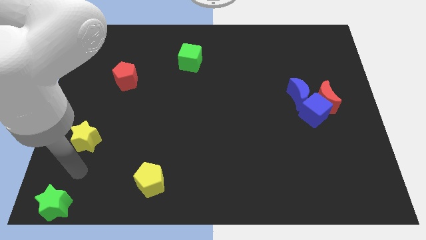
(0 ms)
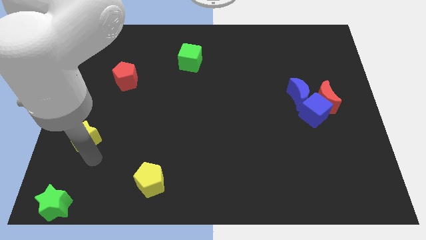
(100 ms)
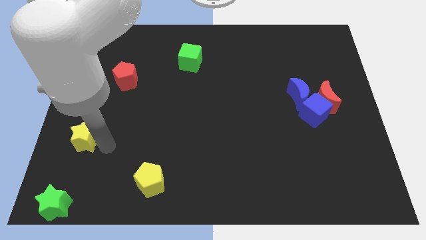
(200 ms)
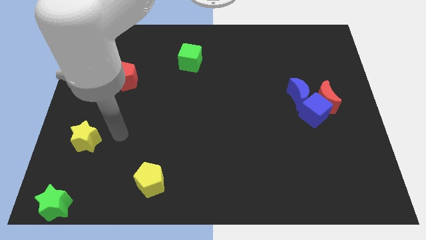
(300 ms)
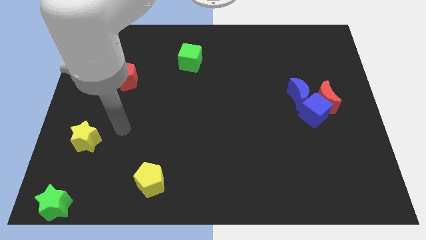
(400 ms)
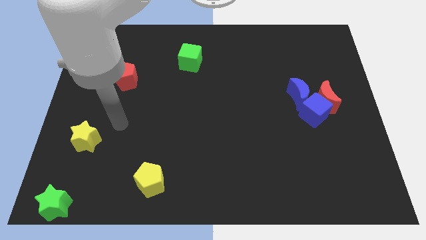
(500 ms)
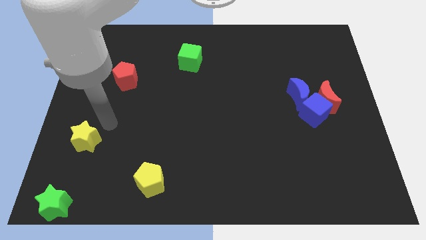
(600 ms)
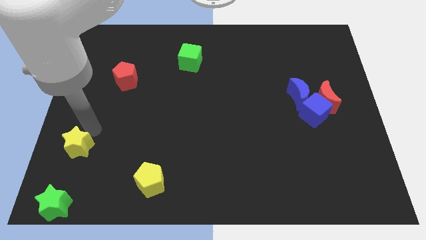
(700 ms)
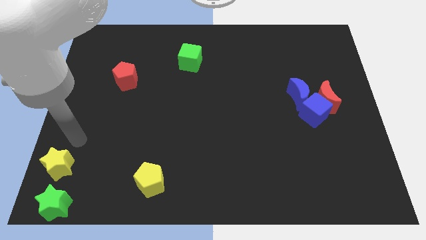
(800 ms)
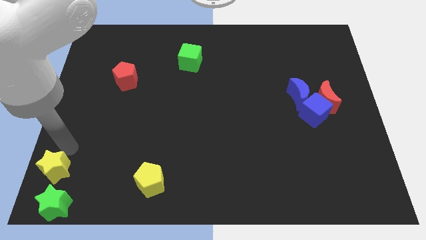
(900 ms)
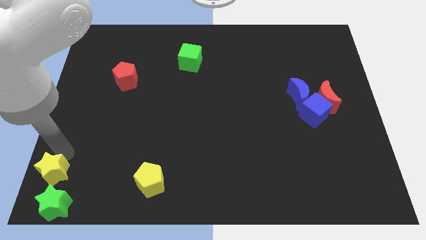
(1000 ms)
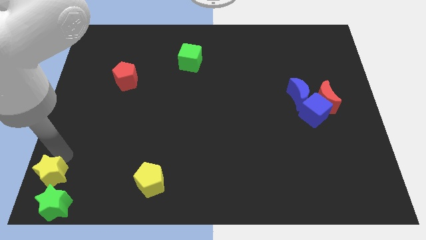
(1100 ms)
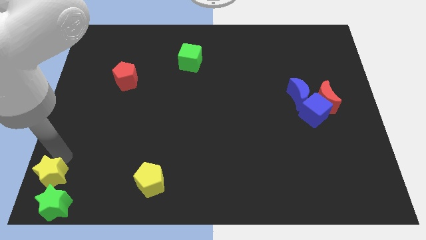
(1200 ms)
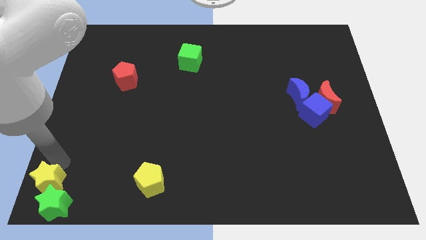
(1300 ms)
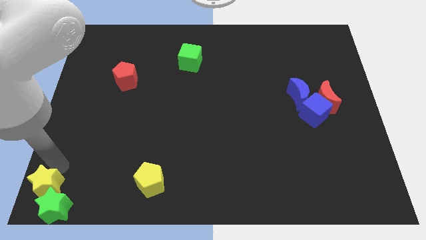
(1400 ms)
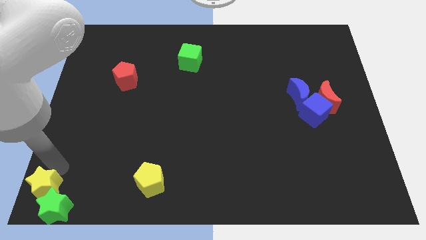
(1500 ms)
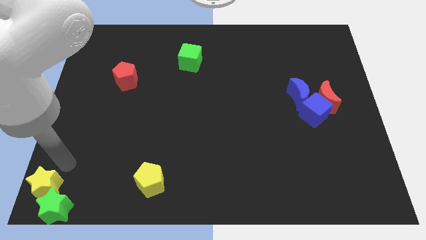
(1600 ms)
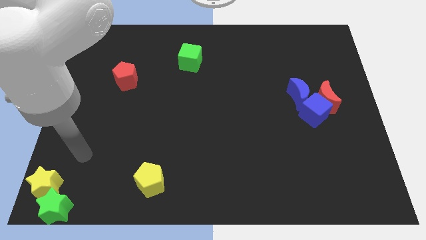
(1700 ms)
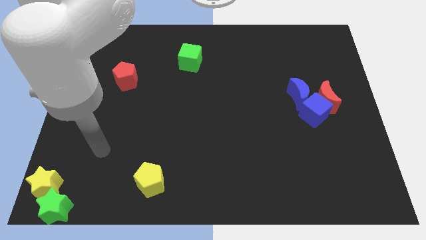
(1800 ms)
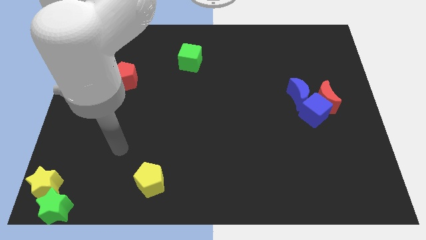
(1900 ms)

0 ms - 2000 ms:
push the yellow star into the green star

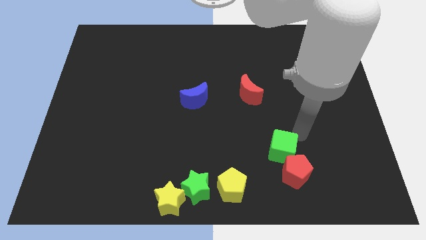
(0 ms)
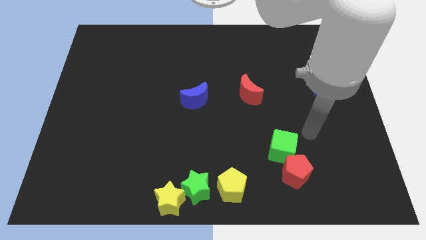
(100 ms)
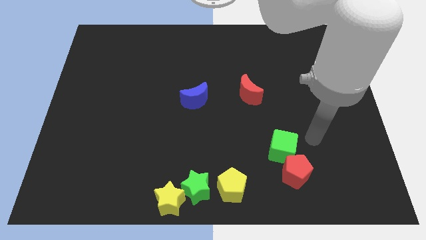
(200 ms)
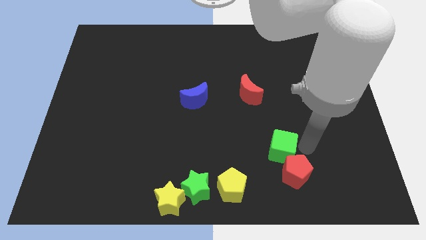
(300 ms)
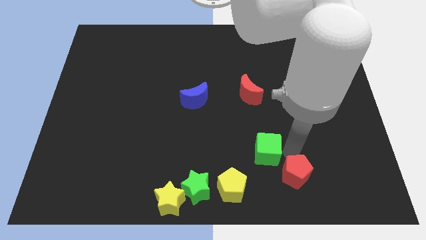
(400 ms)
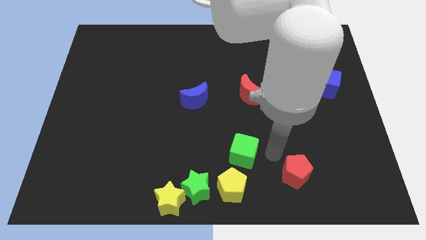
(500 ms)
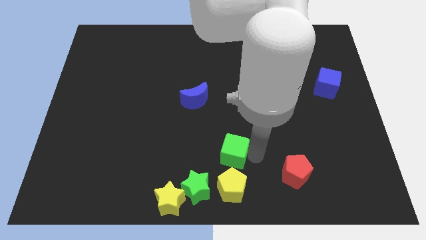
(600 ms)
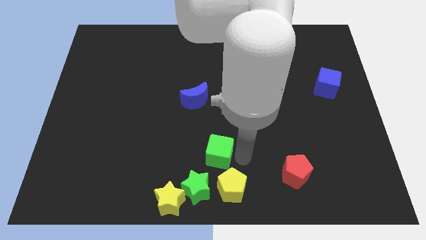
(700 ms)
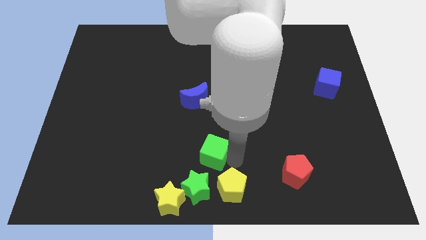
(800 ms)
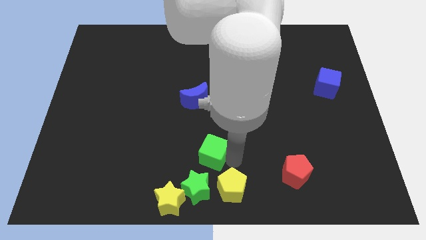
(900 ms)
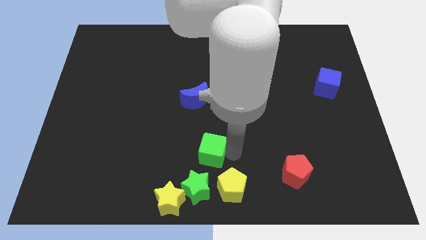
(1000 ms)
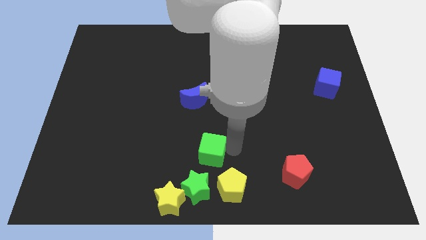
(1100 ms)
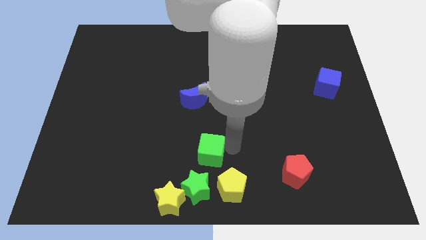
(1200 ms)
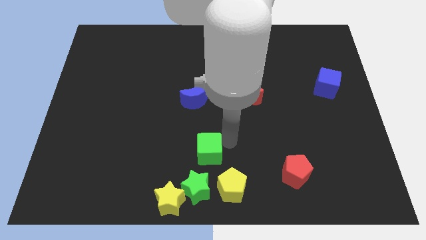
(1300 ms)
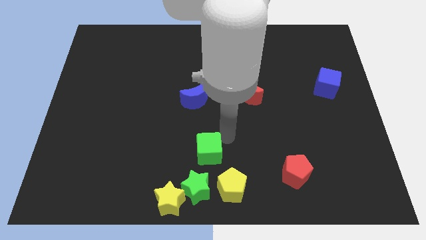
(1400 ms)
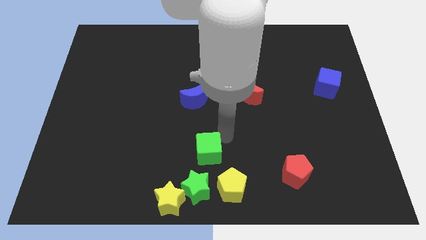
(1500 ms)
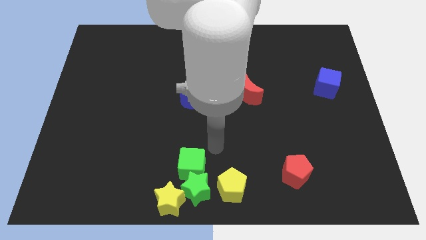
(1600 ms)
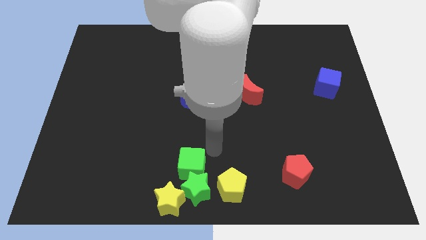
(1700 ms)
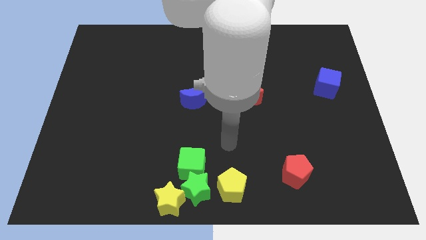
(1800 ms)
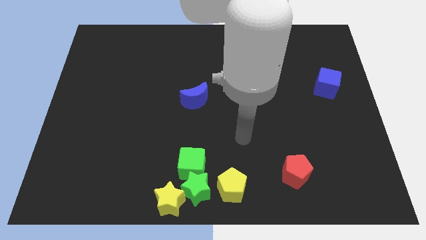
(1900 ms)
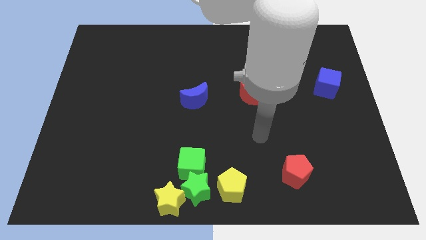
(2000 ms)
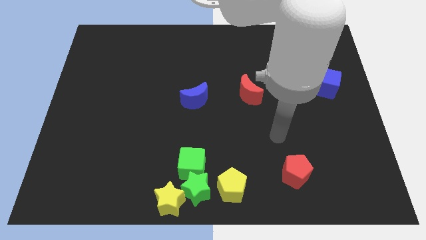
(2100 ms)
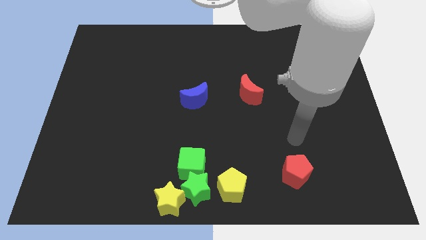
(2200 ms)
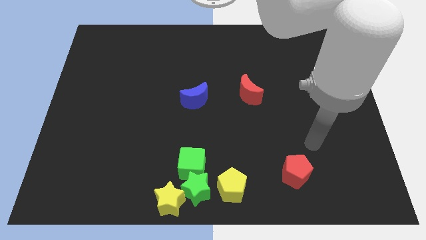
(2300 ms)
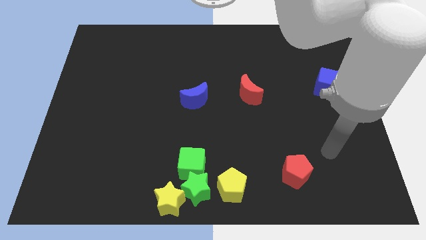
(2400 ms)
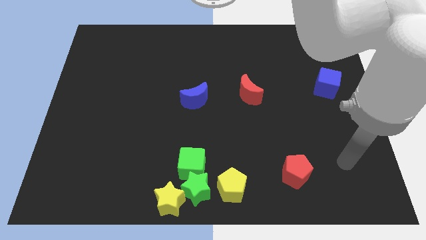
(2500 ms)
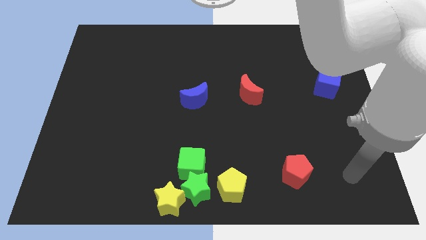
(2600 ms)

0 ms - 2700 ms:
push the green cube above green star

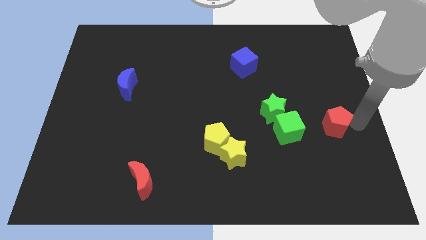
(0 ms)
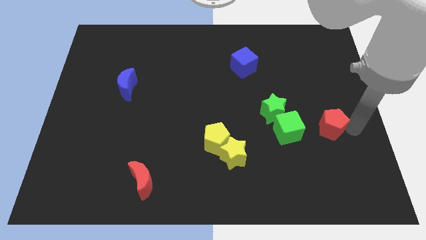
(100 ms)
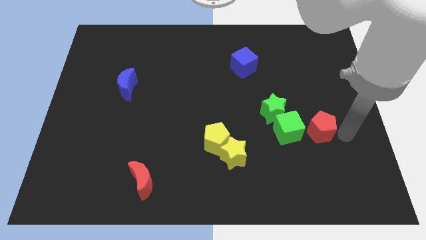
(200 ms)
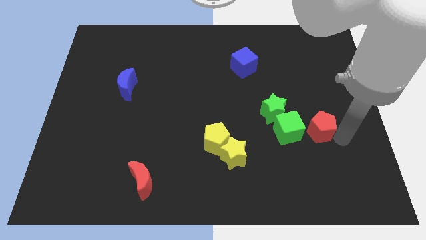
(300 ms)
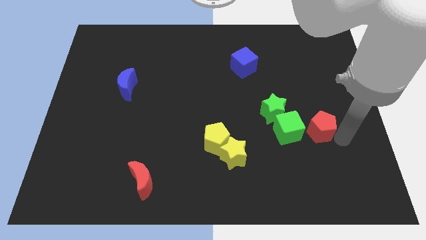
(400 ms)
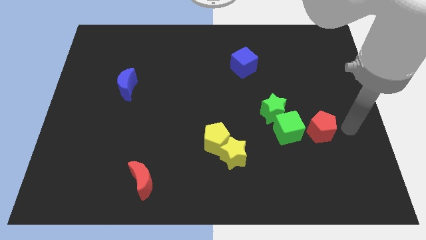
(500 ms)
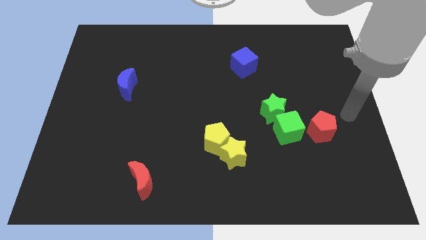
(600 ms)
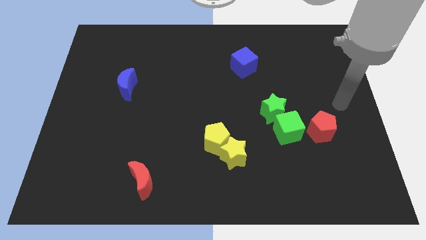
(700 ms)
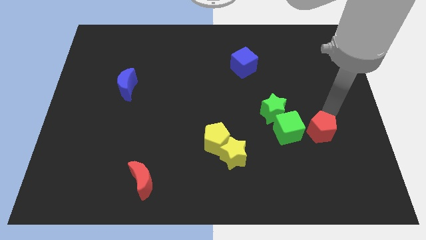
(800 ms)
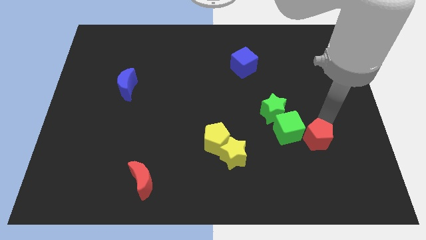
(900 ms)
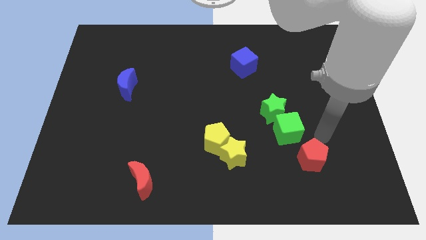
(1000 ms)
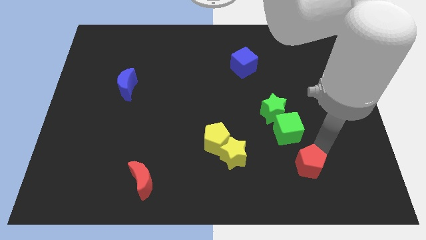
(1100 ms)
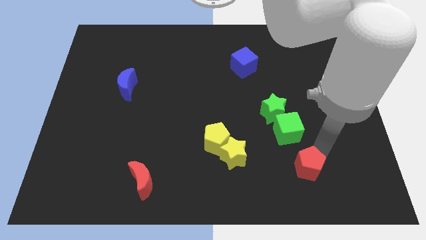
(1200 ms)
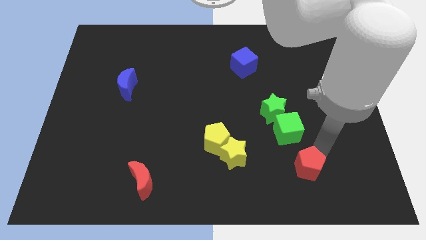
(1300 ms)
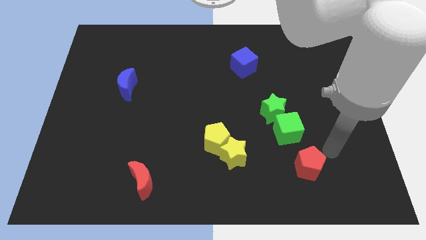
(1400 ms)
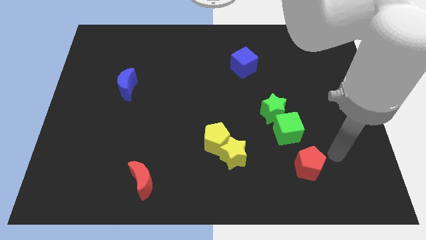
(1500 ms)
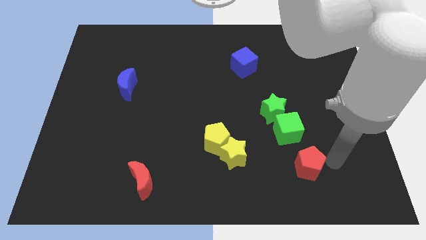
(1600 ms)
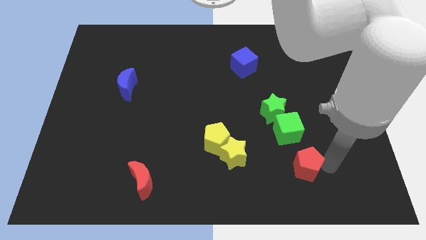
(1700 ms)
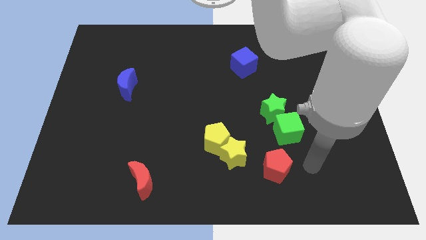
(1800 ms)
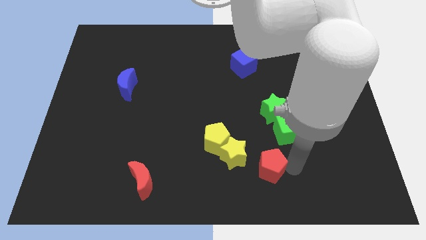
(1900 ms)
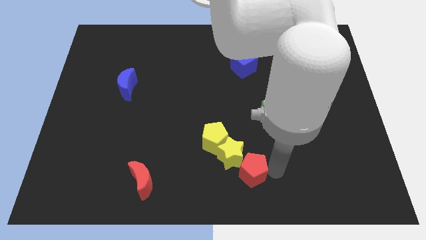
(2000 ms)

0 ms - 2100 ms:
move the red pentagon below the yellow star

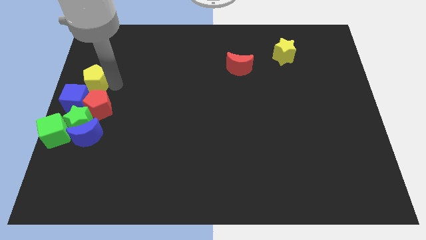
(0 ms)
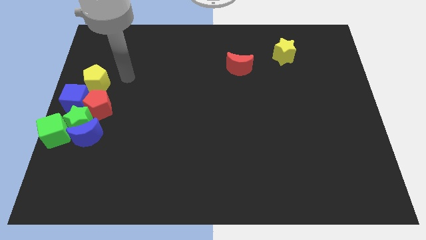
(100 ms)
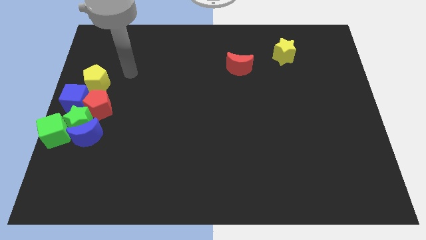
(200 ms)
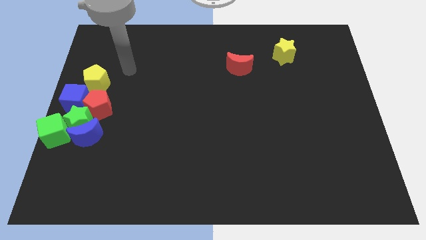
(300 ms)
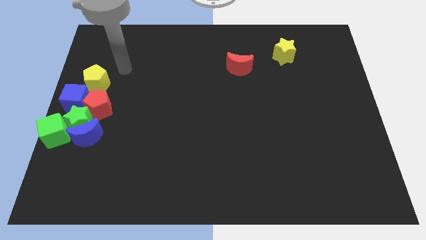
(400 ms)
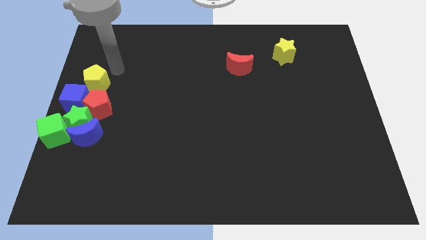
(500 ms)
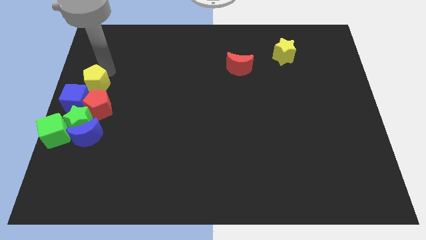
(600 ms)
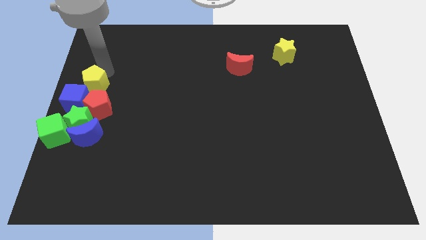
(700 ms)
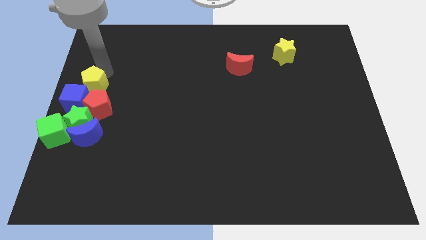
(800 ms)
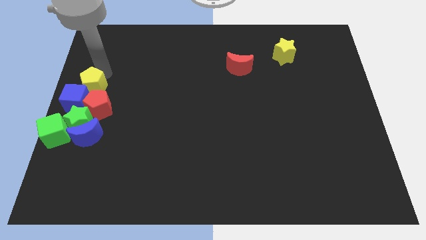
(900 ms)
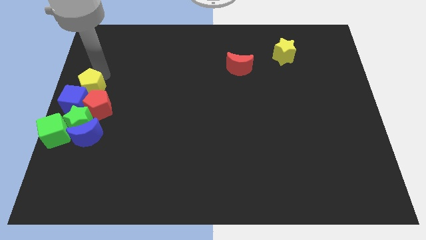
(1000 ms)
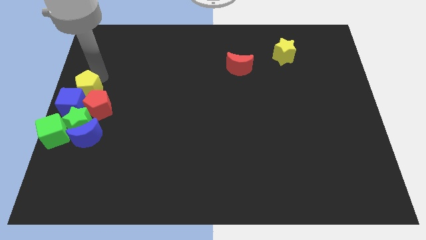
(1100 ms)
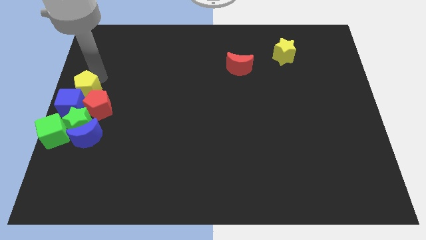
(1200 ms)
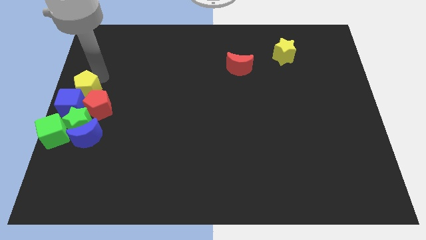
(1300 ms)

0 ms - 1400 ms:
move the yellow pentagon into the group of blocks

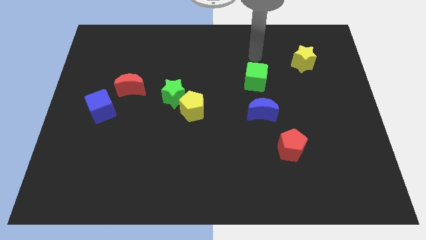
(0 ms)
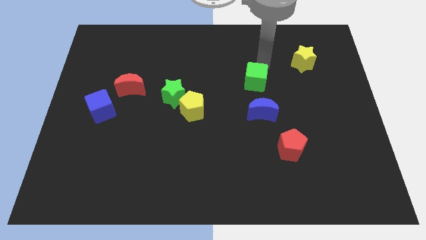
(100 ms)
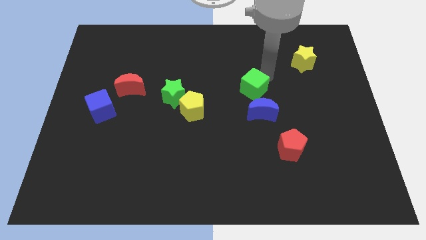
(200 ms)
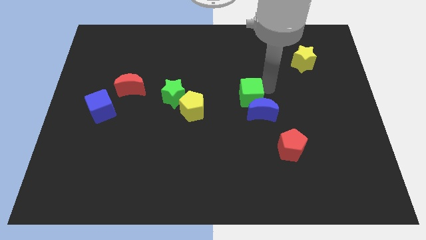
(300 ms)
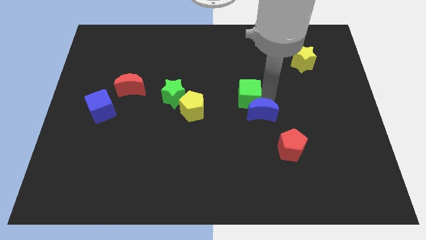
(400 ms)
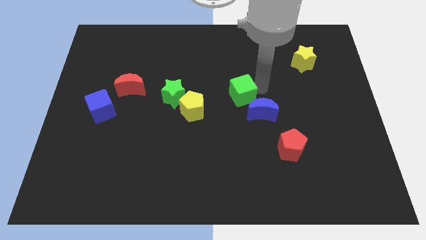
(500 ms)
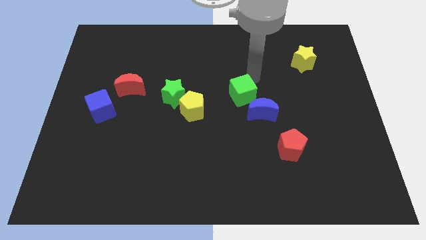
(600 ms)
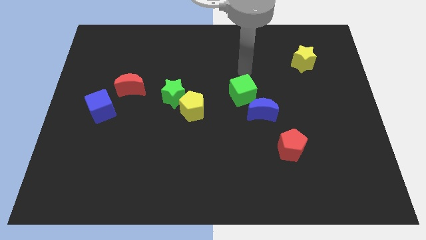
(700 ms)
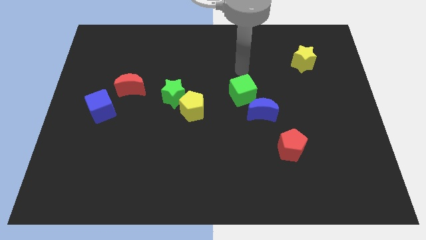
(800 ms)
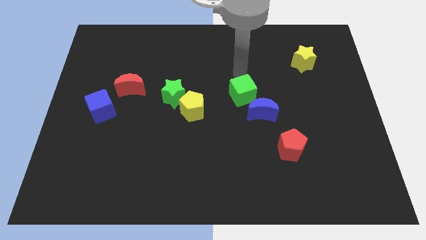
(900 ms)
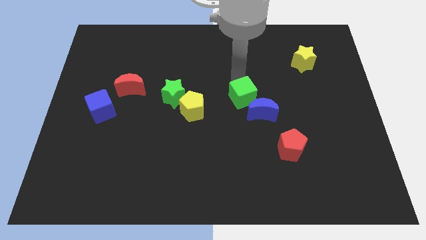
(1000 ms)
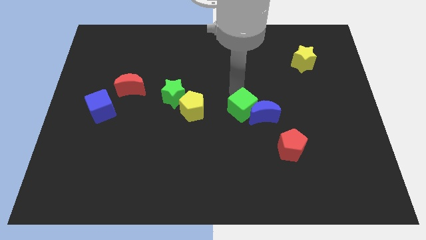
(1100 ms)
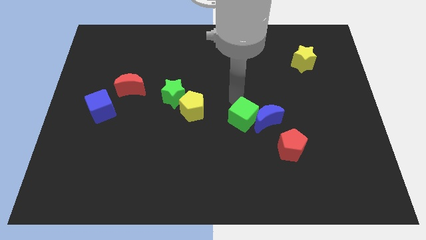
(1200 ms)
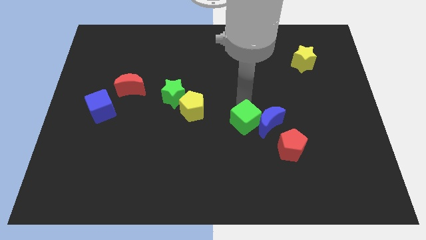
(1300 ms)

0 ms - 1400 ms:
push the green cube into the blue moon
